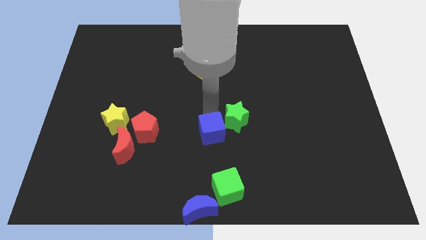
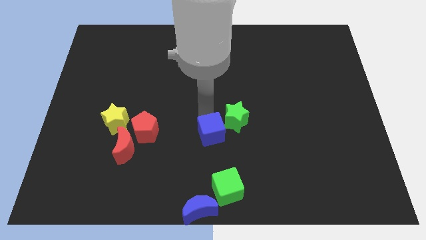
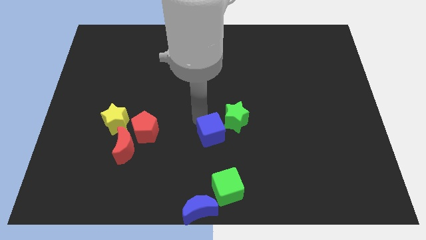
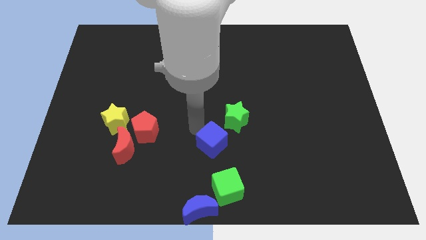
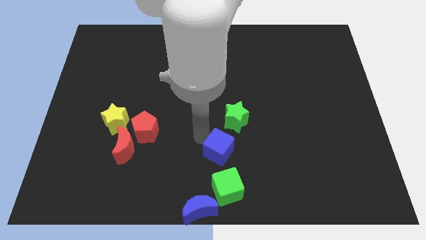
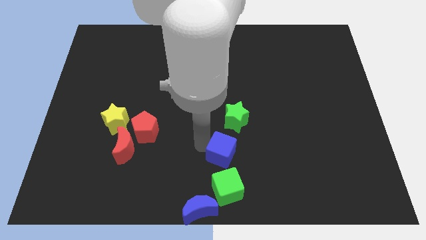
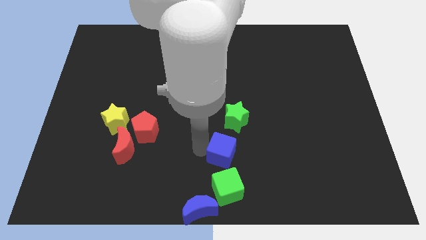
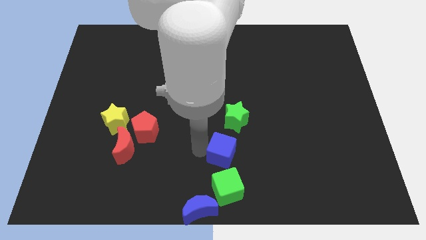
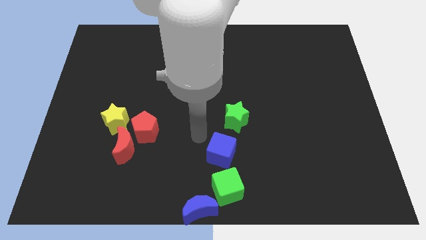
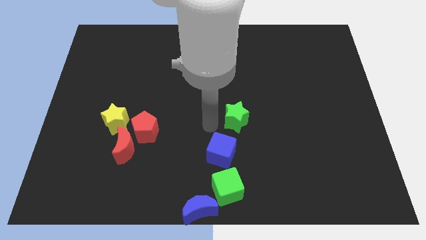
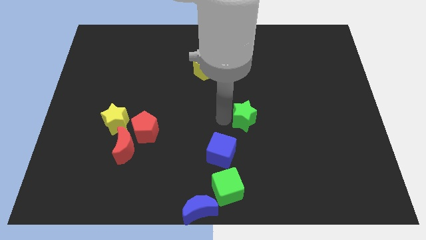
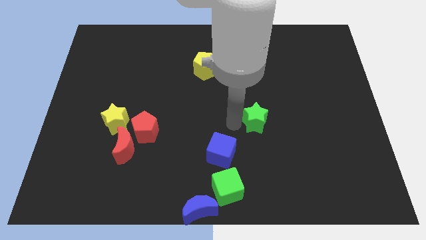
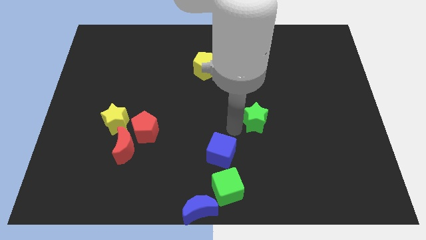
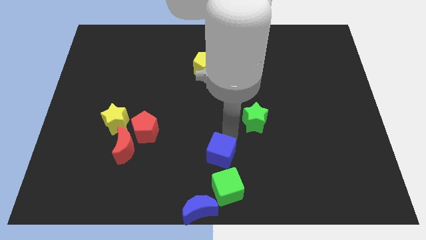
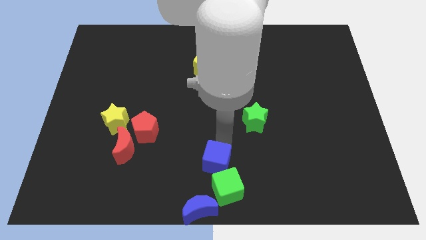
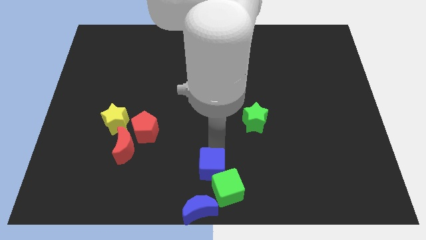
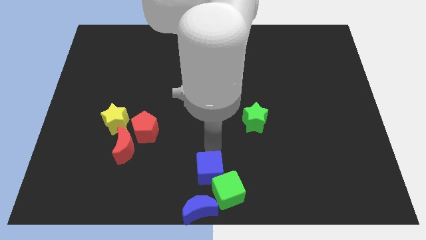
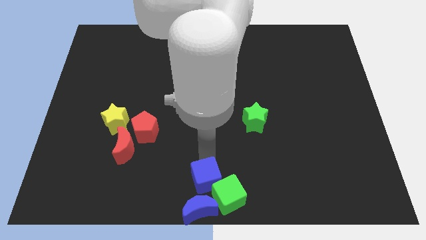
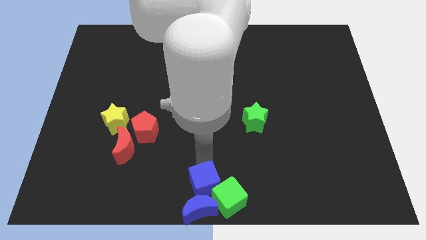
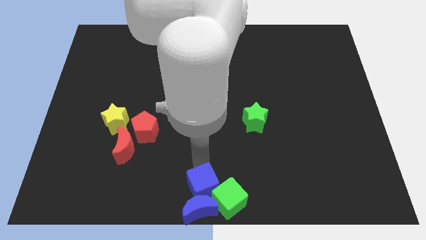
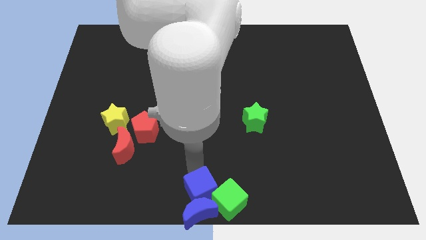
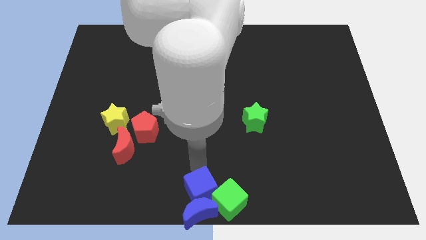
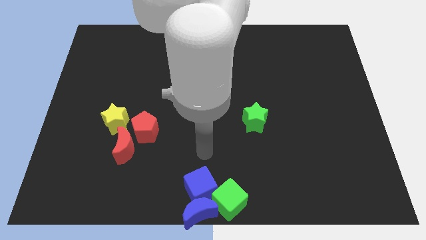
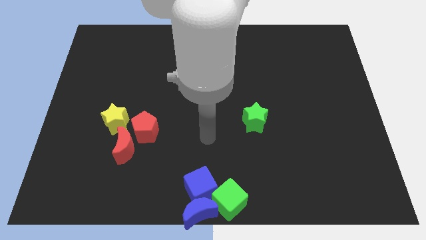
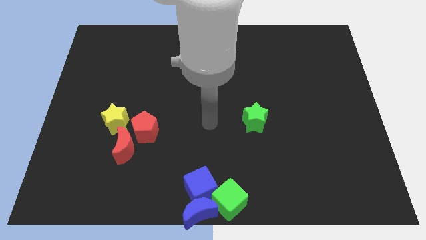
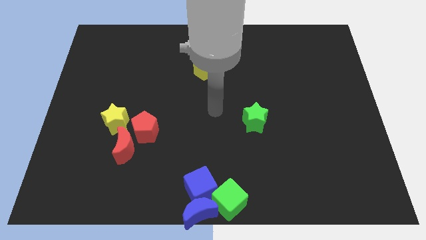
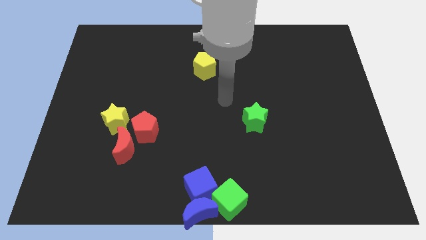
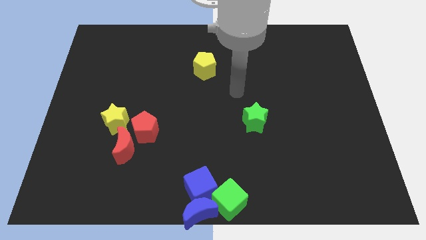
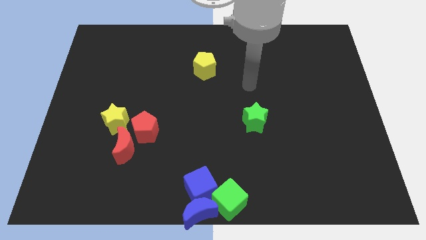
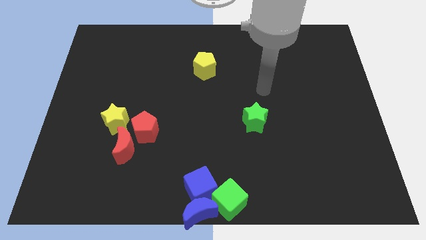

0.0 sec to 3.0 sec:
place the blue cube into the blue moon

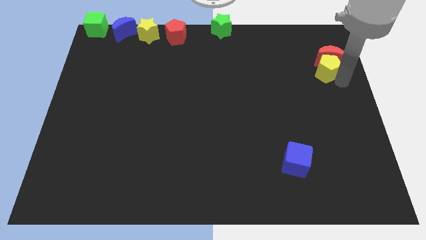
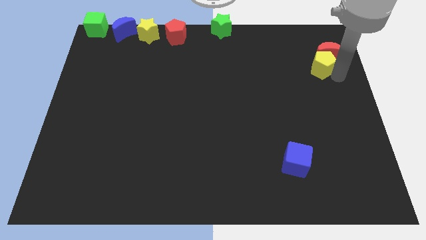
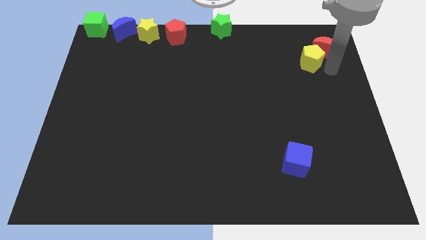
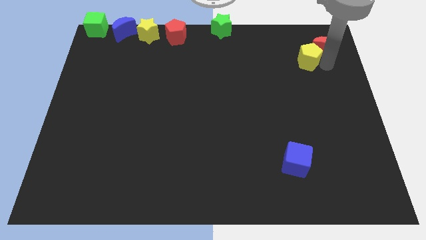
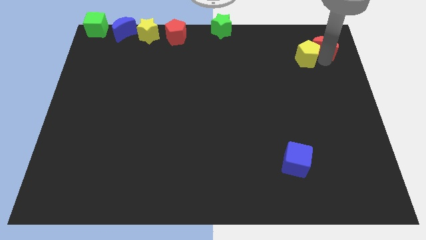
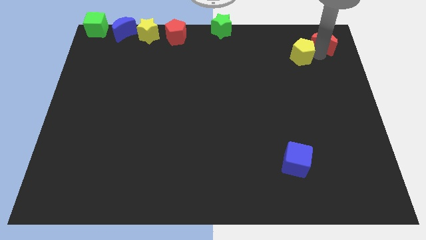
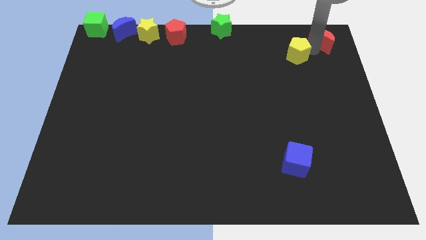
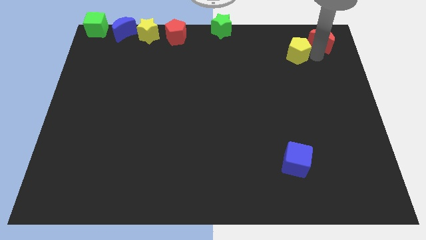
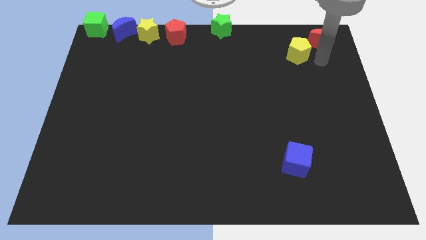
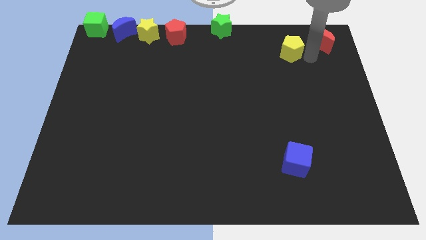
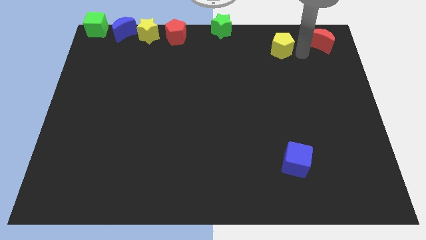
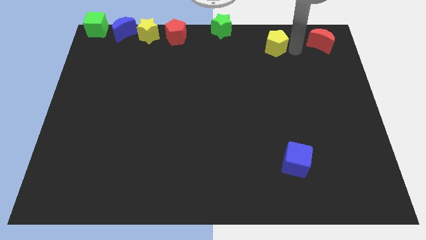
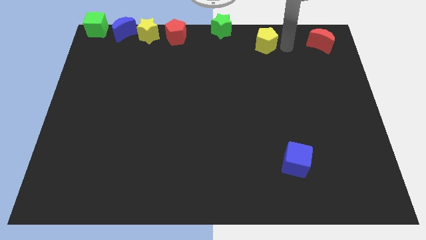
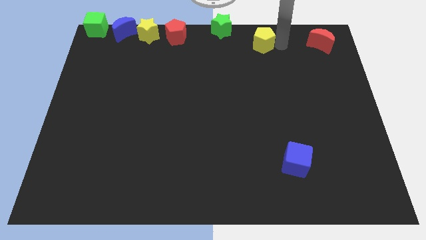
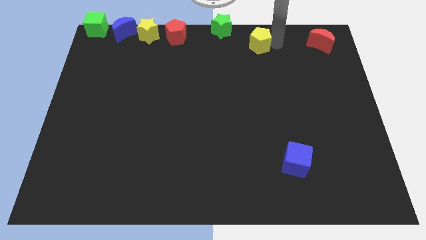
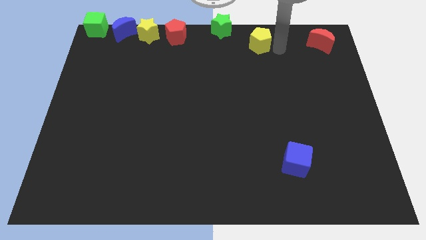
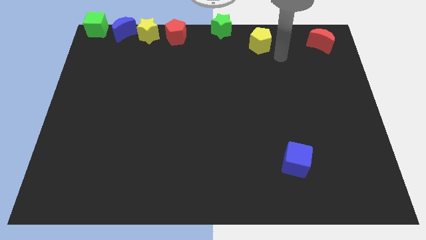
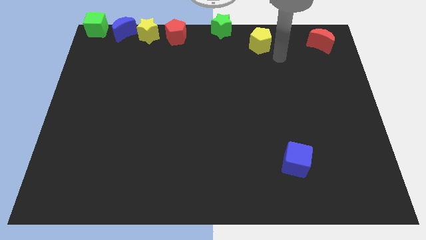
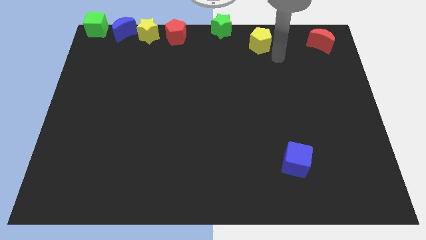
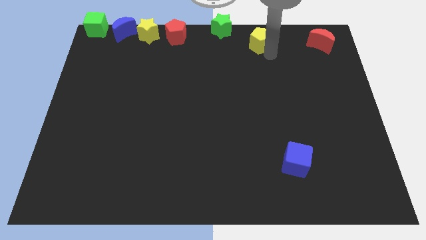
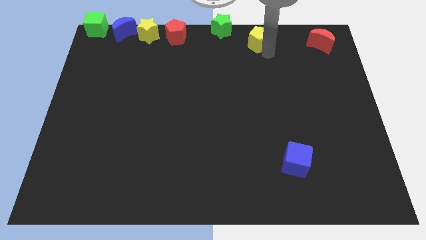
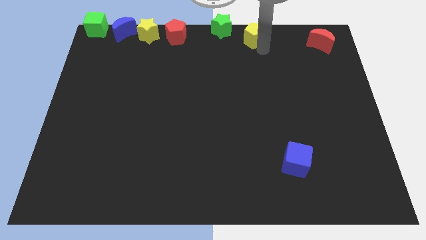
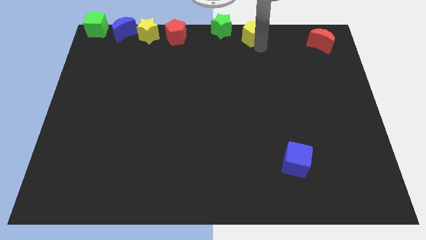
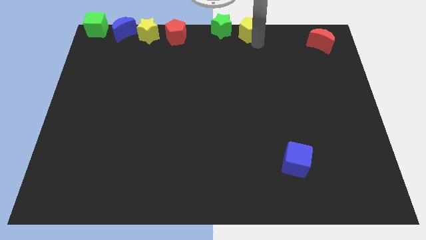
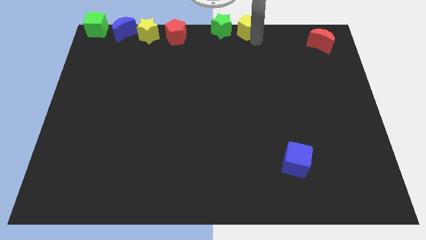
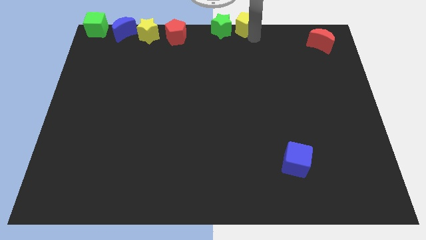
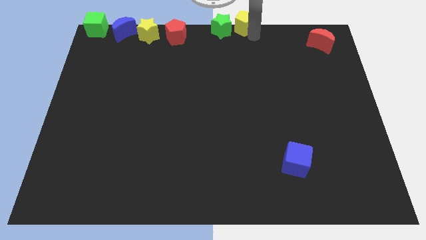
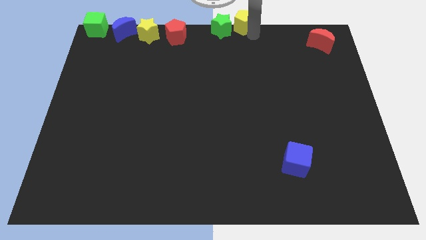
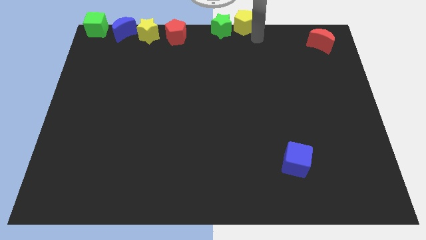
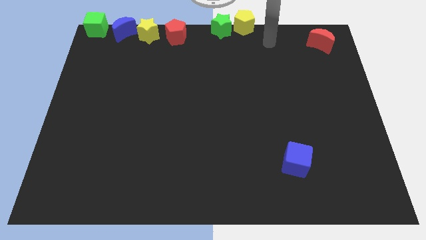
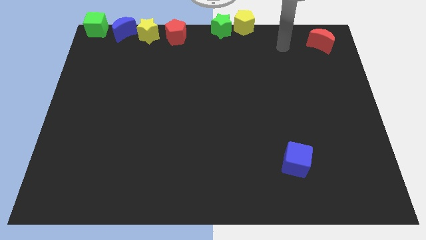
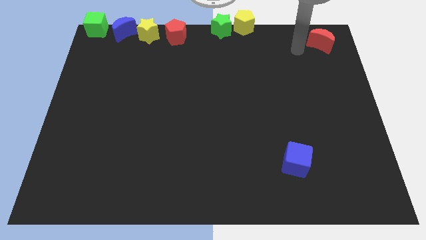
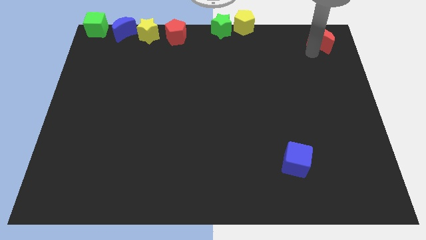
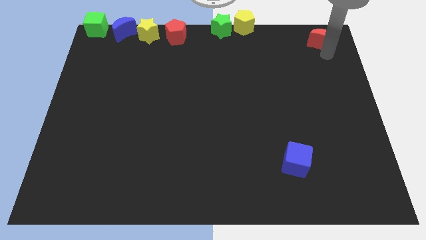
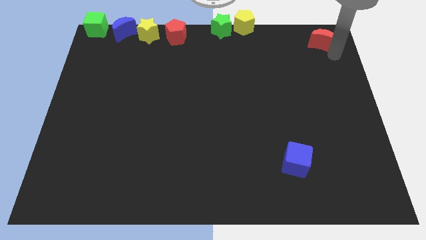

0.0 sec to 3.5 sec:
put the yellow pentagon on the right side of the green star

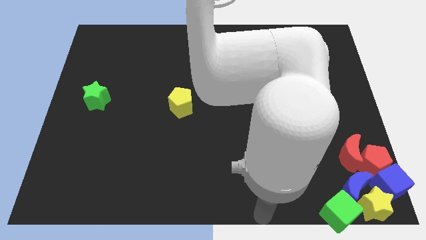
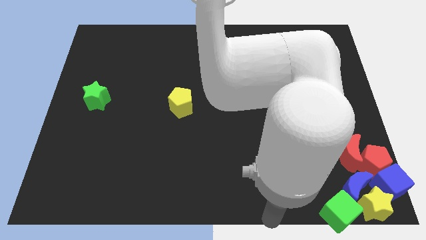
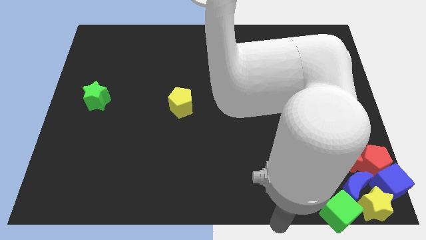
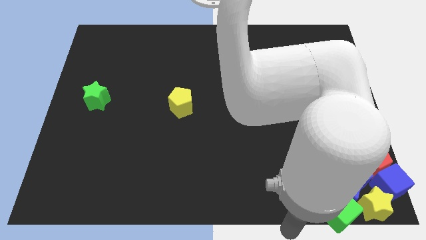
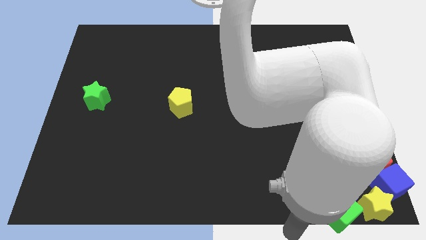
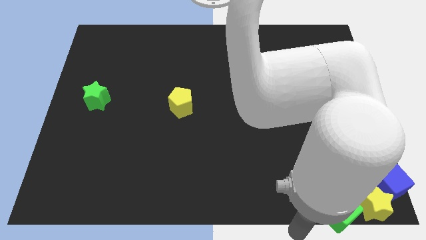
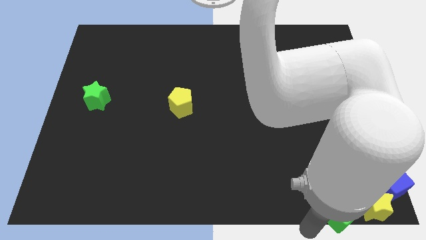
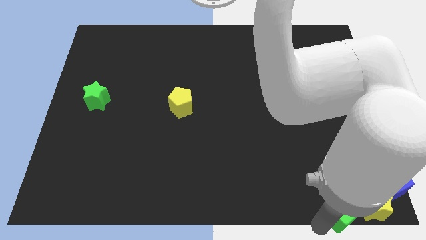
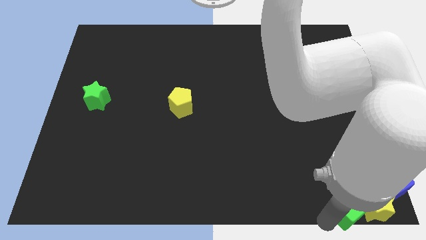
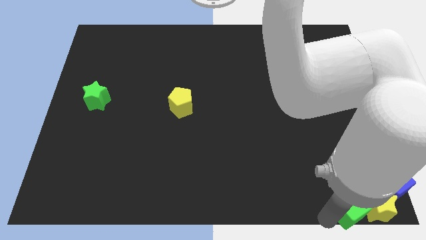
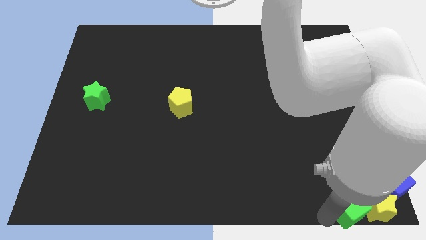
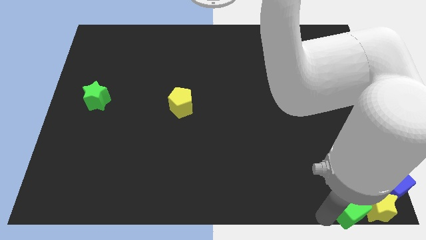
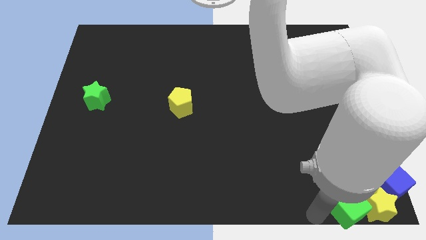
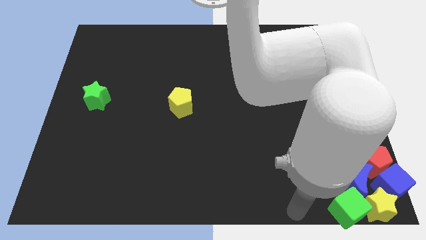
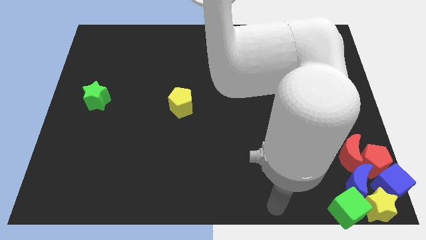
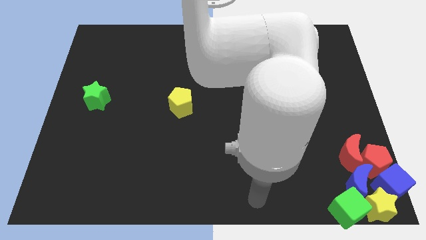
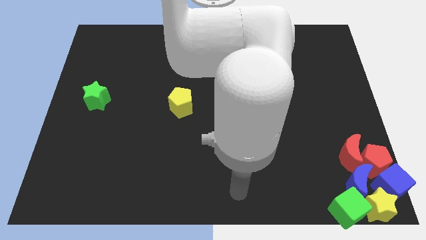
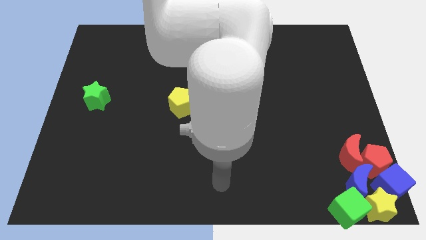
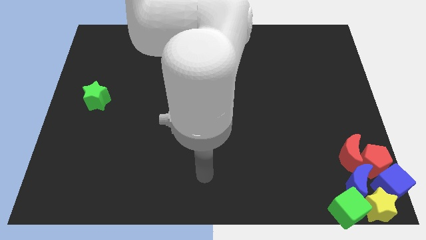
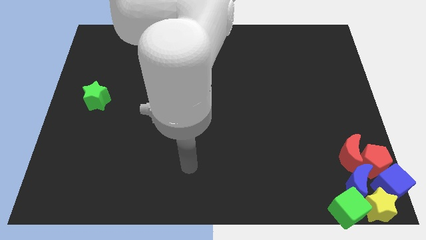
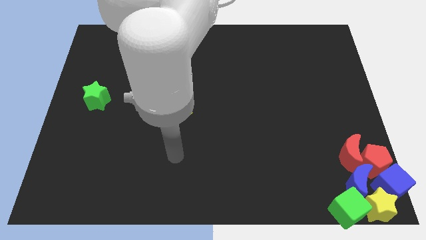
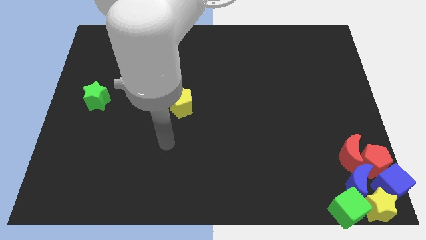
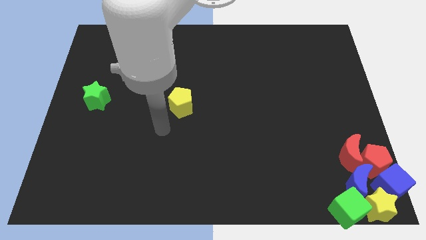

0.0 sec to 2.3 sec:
add the green cube into the yellow star from the left
